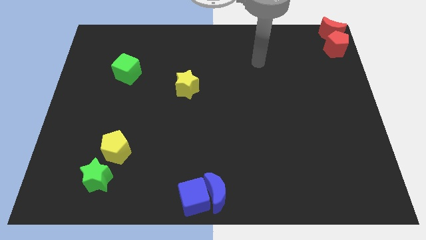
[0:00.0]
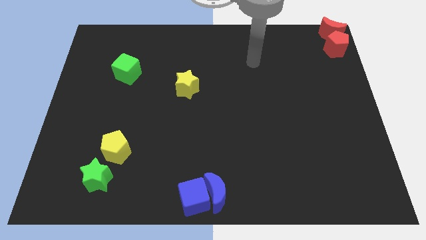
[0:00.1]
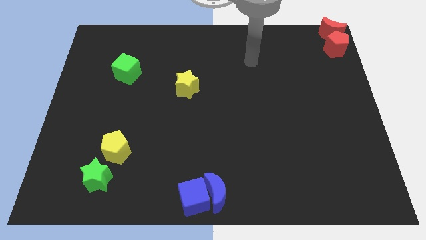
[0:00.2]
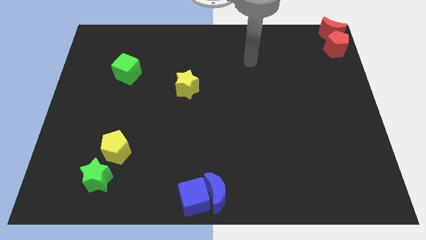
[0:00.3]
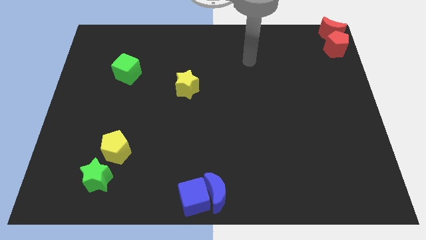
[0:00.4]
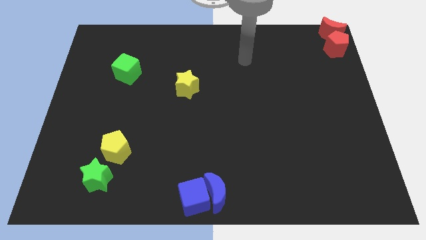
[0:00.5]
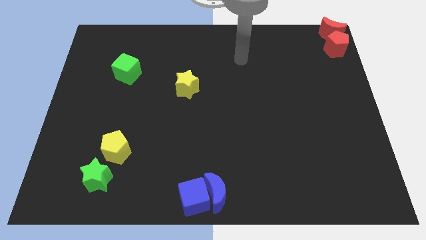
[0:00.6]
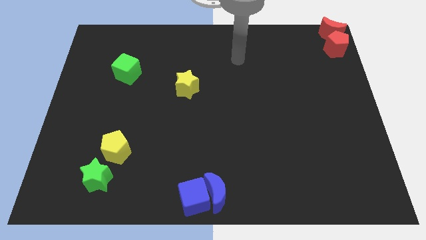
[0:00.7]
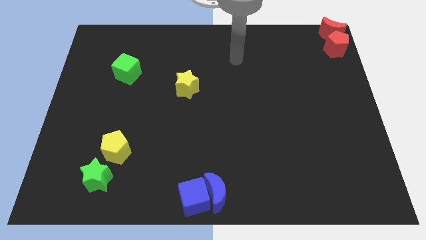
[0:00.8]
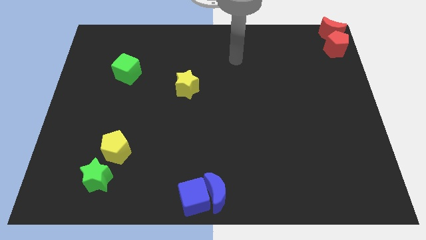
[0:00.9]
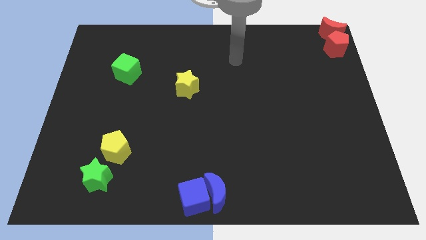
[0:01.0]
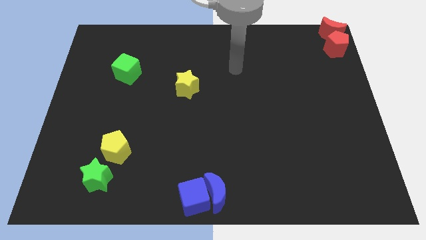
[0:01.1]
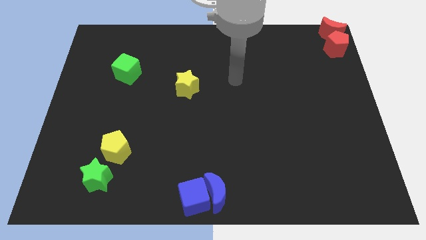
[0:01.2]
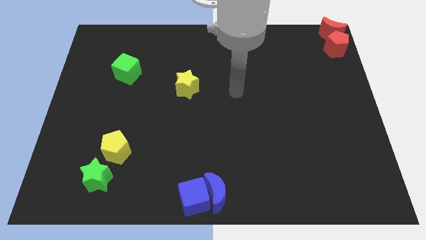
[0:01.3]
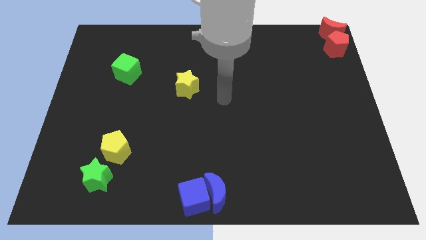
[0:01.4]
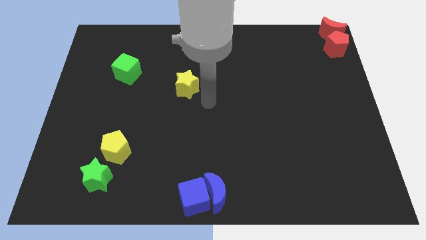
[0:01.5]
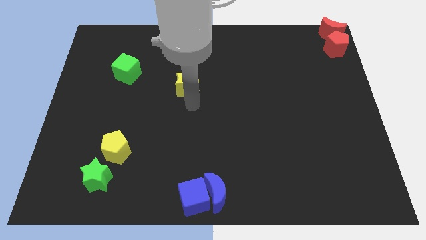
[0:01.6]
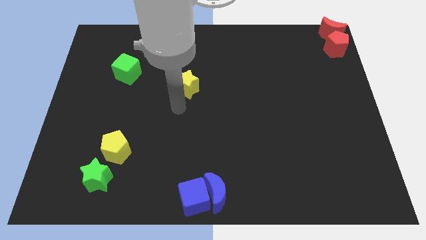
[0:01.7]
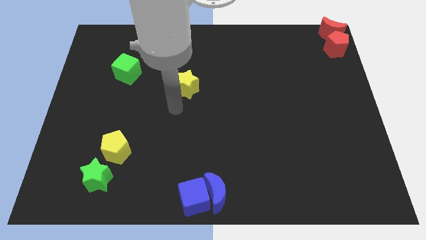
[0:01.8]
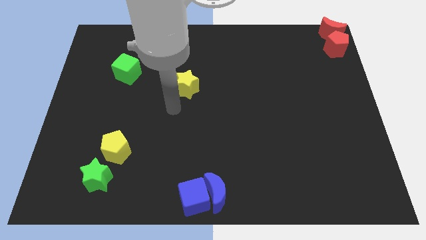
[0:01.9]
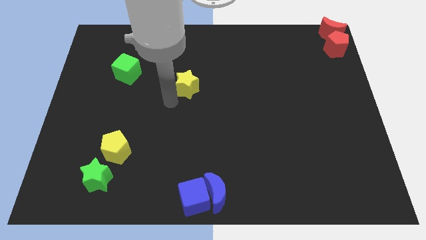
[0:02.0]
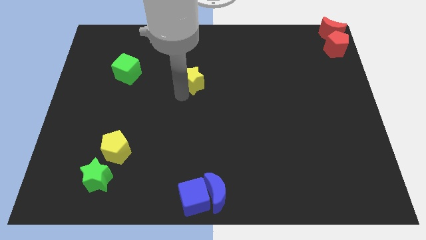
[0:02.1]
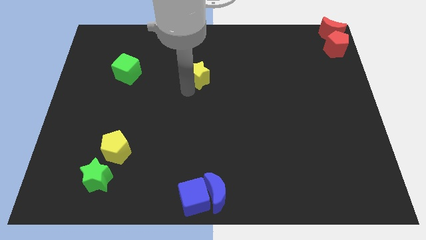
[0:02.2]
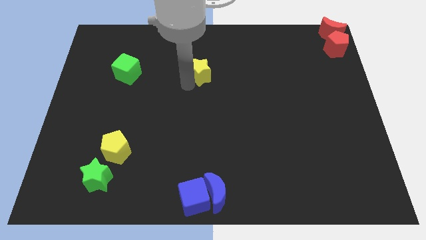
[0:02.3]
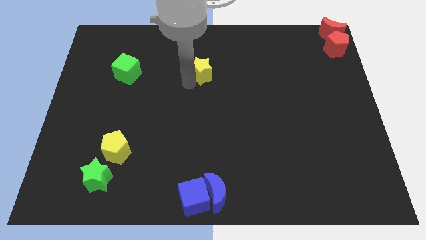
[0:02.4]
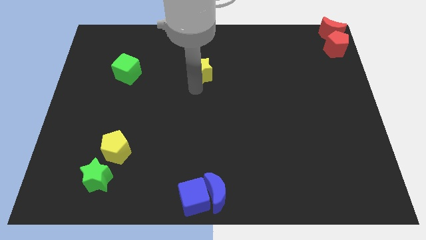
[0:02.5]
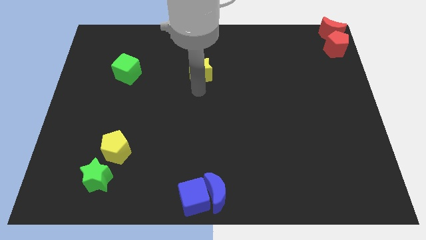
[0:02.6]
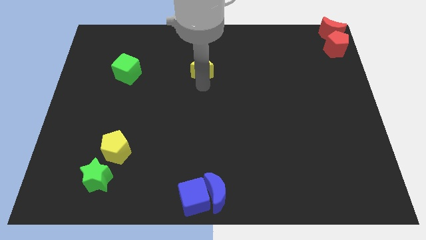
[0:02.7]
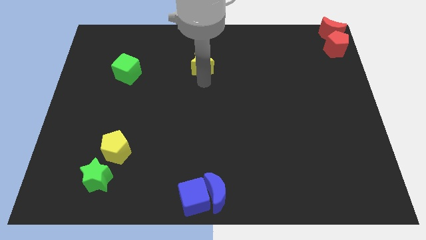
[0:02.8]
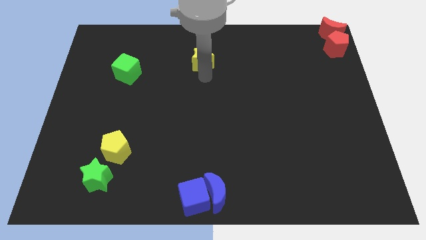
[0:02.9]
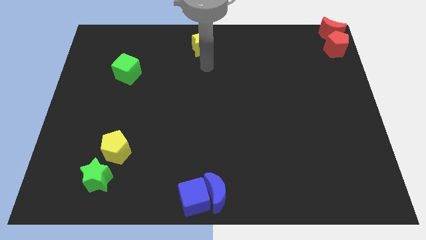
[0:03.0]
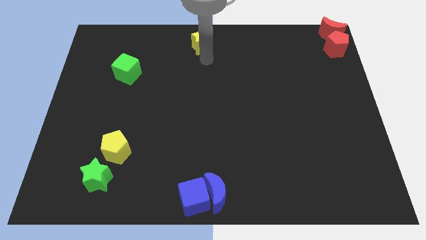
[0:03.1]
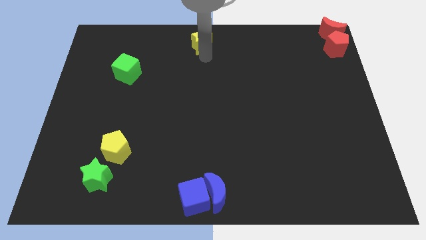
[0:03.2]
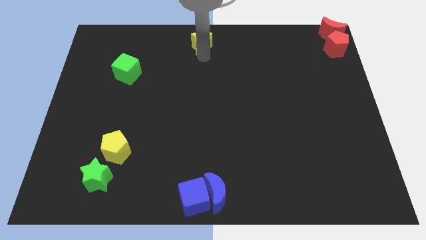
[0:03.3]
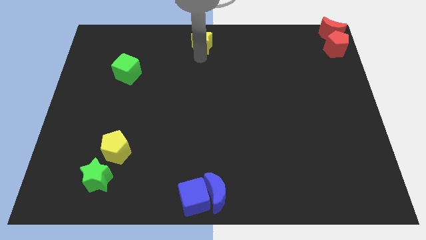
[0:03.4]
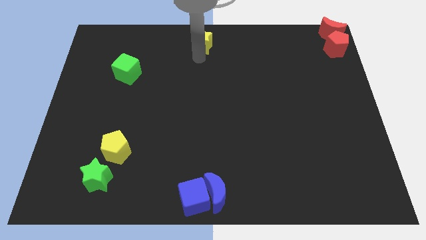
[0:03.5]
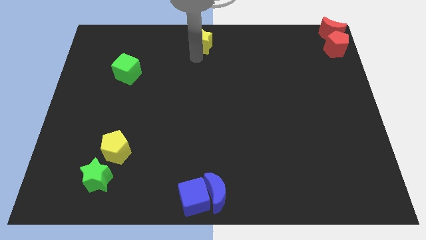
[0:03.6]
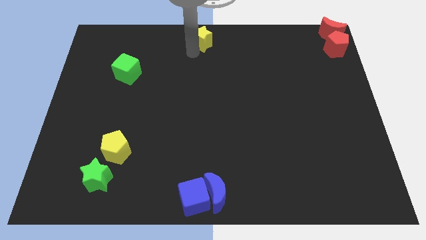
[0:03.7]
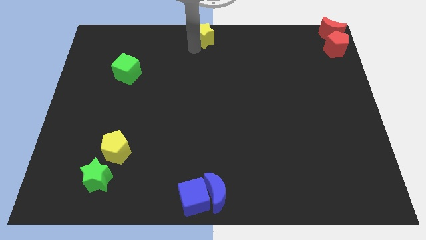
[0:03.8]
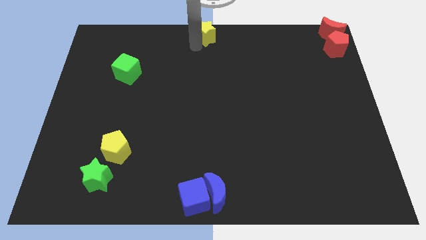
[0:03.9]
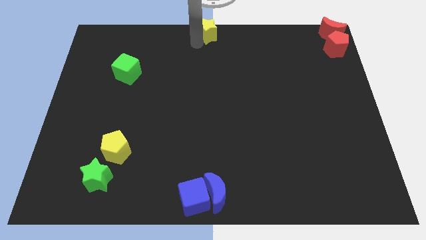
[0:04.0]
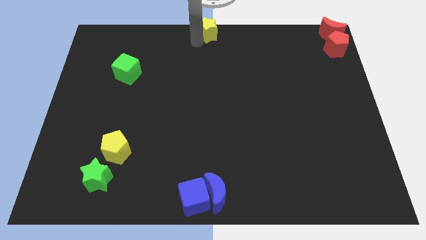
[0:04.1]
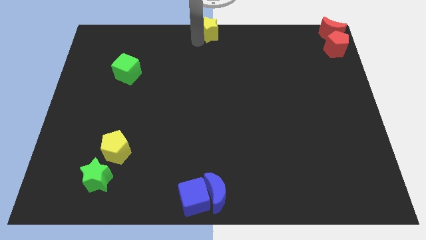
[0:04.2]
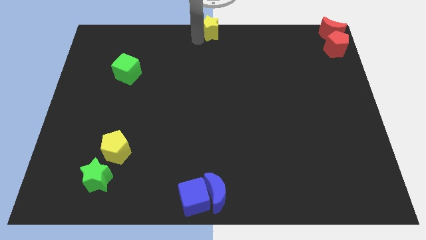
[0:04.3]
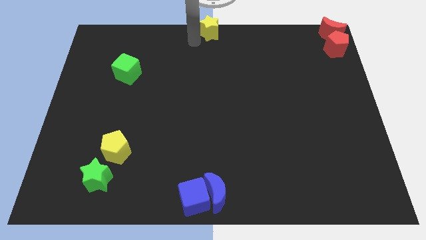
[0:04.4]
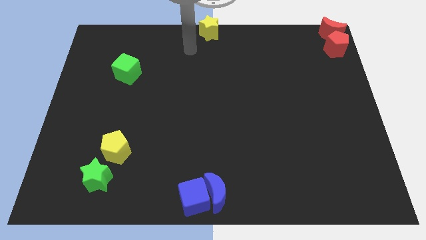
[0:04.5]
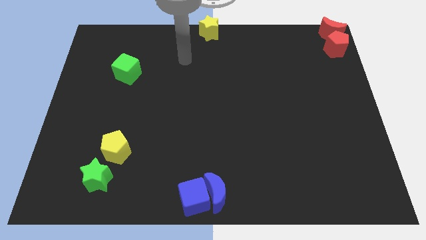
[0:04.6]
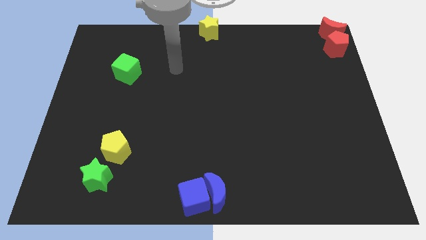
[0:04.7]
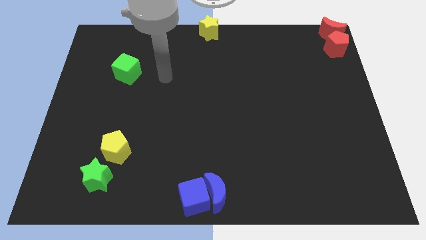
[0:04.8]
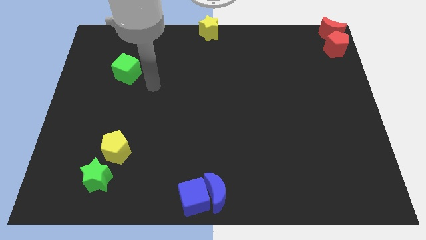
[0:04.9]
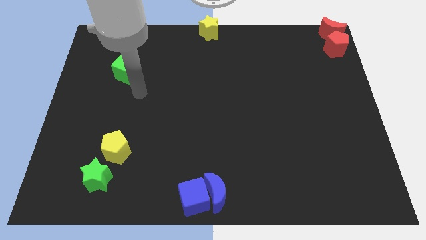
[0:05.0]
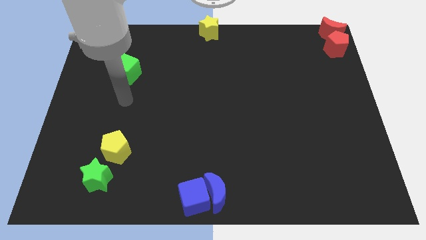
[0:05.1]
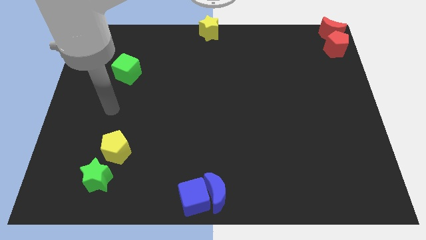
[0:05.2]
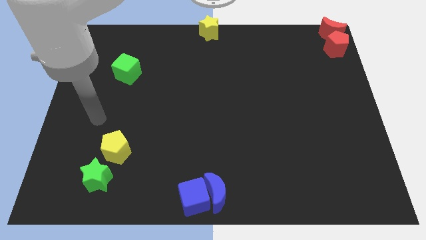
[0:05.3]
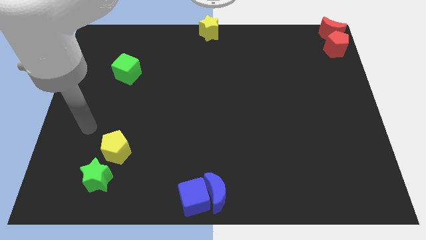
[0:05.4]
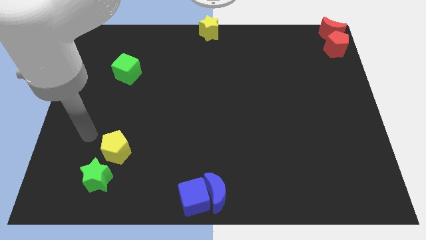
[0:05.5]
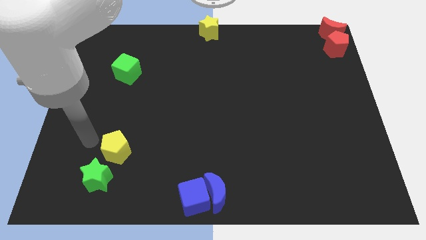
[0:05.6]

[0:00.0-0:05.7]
place the yellow star at the top center of the board

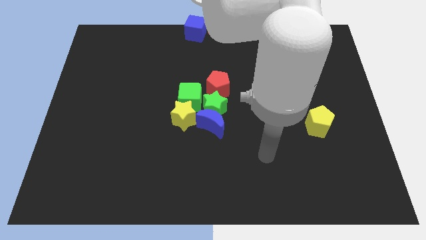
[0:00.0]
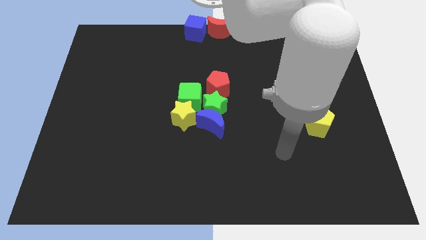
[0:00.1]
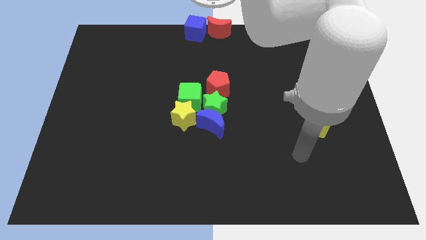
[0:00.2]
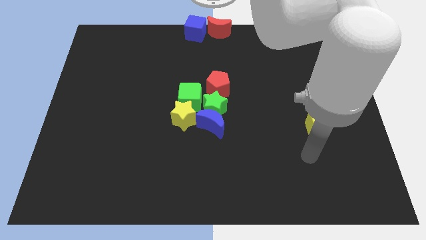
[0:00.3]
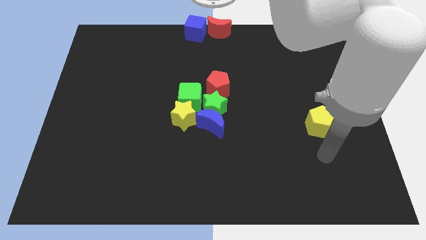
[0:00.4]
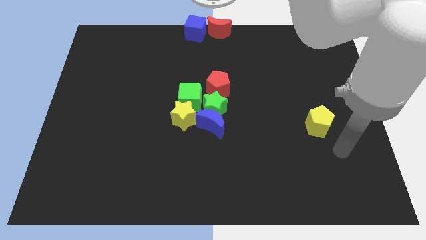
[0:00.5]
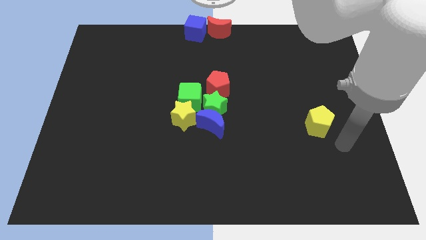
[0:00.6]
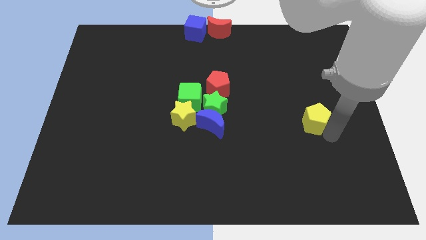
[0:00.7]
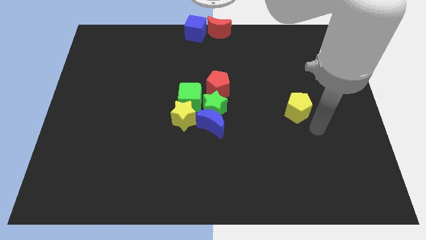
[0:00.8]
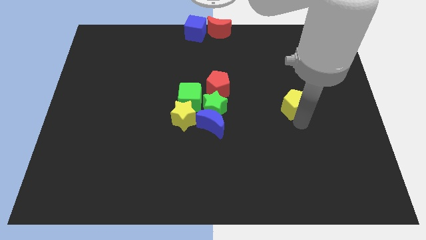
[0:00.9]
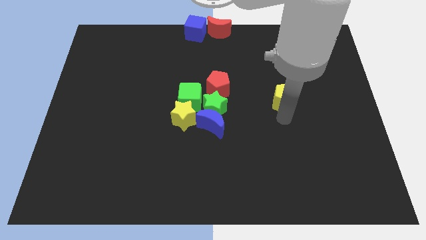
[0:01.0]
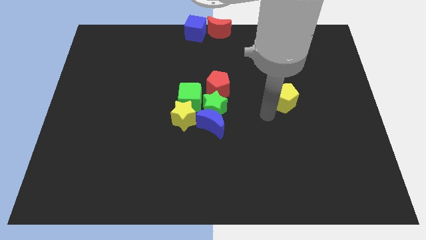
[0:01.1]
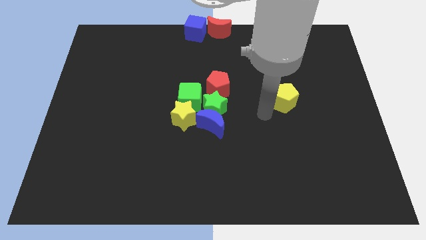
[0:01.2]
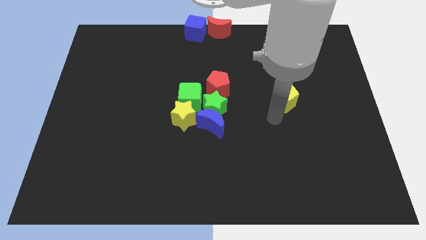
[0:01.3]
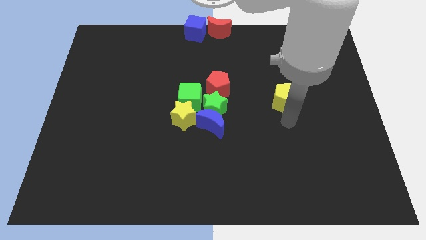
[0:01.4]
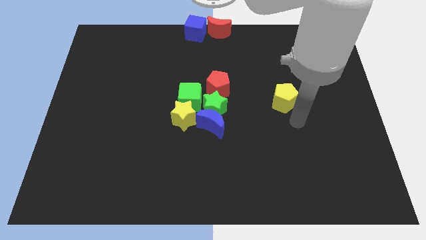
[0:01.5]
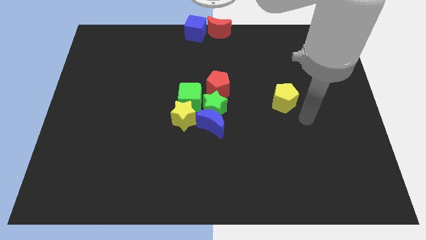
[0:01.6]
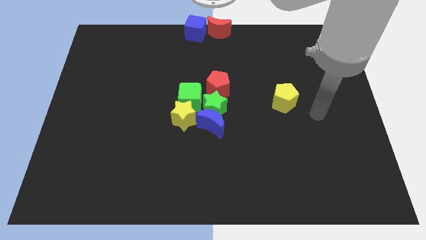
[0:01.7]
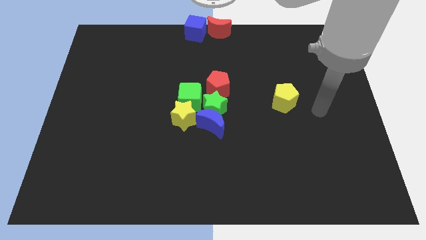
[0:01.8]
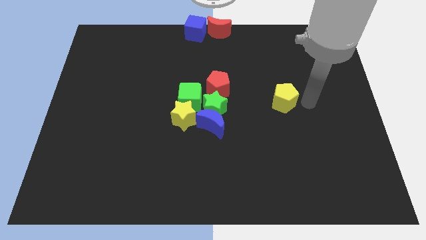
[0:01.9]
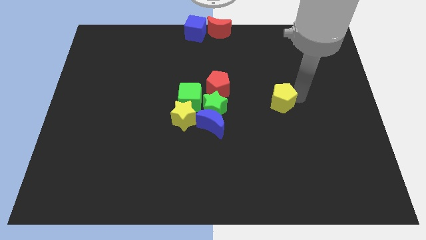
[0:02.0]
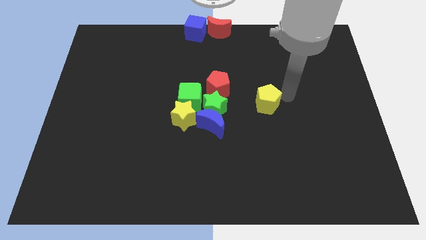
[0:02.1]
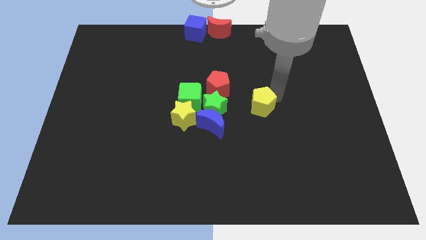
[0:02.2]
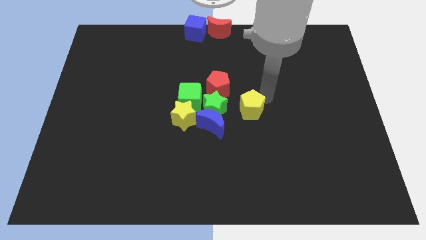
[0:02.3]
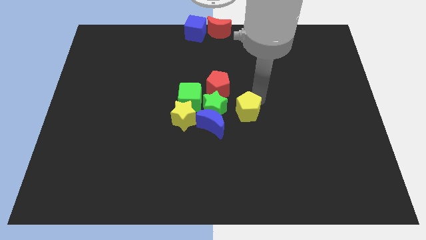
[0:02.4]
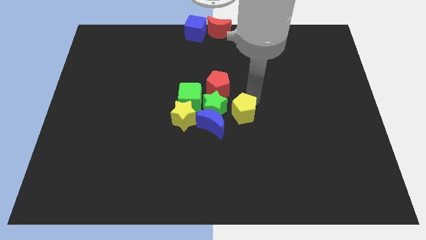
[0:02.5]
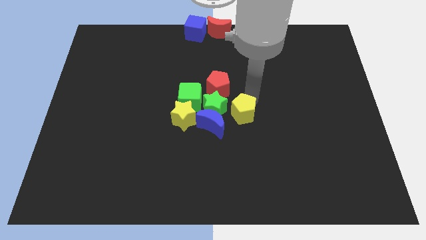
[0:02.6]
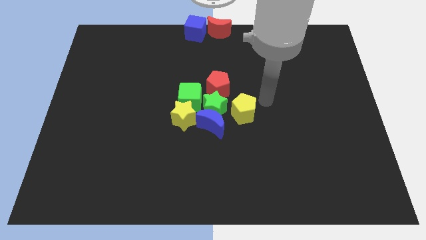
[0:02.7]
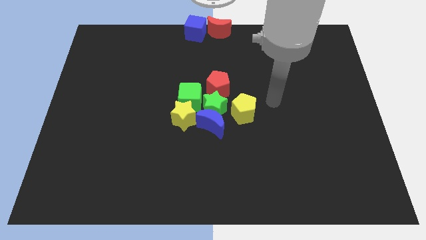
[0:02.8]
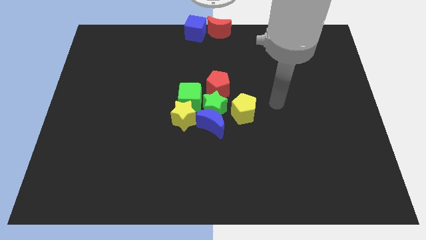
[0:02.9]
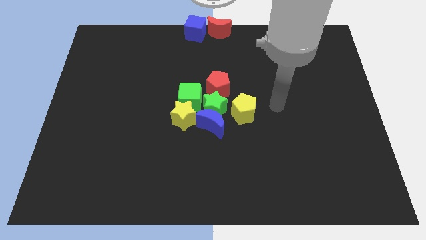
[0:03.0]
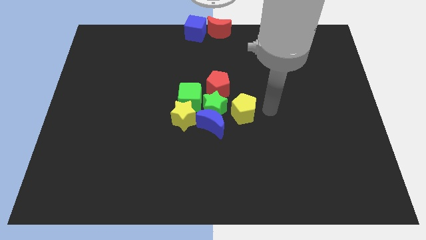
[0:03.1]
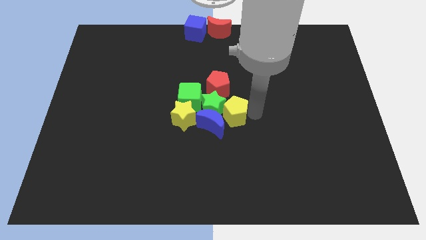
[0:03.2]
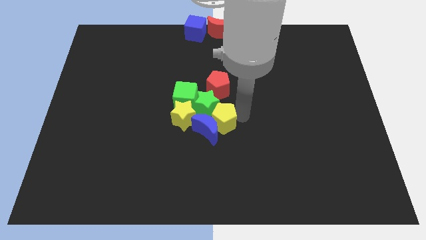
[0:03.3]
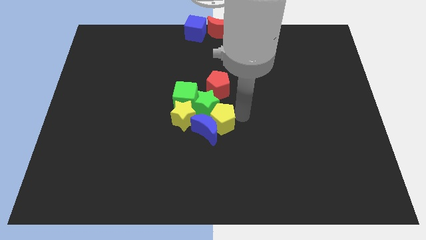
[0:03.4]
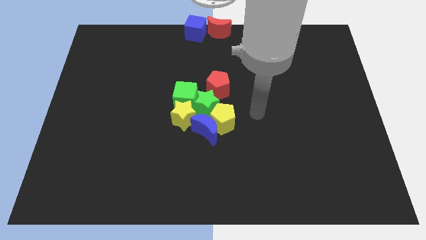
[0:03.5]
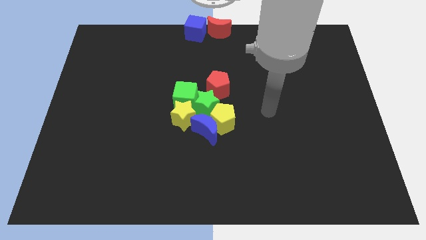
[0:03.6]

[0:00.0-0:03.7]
place yellow pentagon to the center of the board
